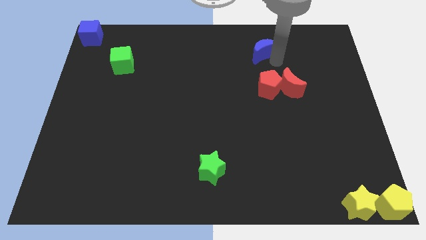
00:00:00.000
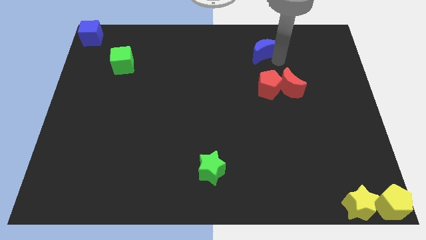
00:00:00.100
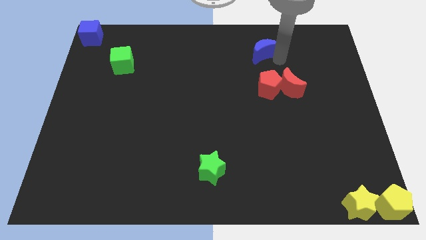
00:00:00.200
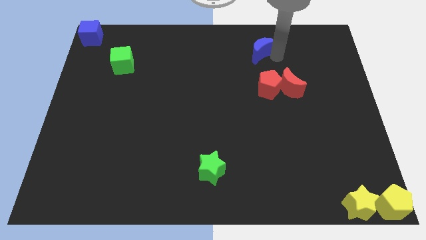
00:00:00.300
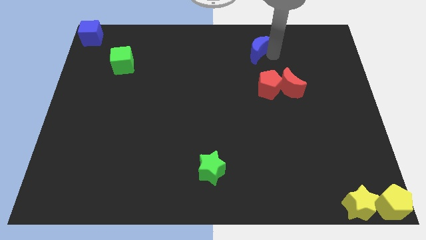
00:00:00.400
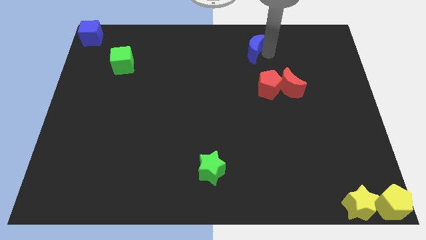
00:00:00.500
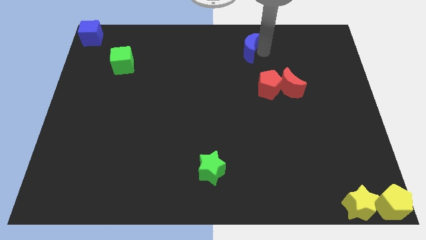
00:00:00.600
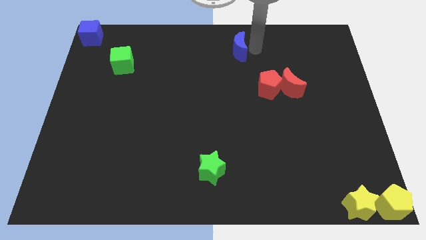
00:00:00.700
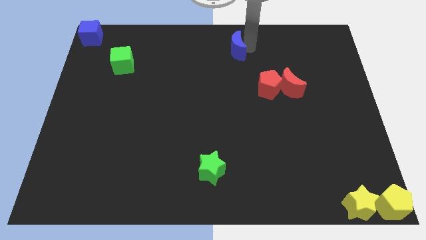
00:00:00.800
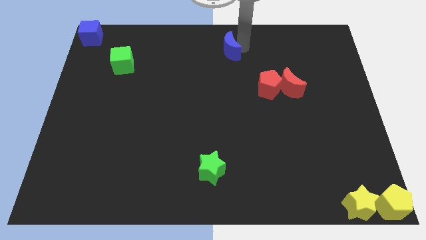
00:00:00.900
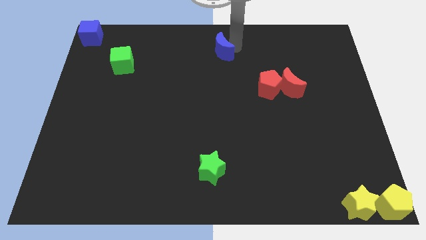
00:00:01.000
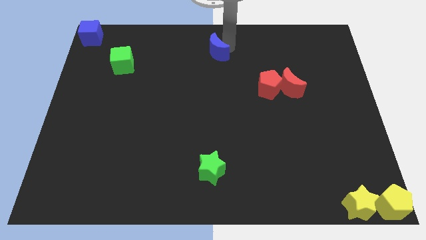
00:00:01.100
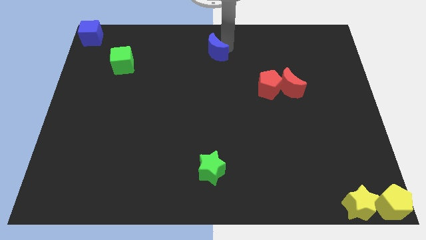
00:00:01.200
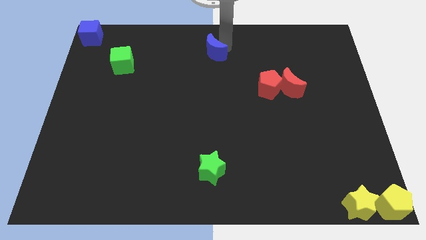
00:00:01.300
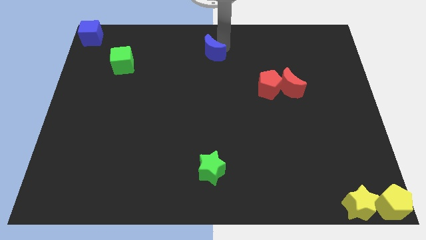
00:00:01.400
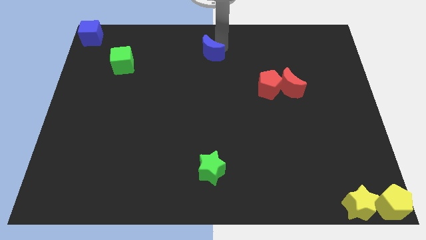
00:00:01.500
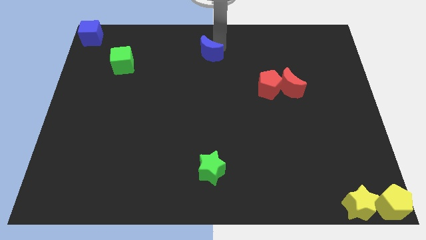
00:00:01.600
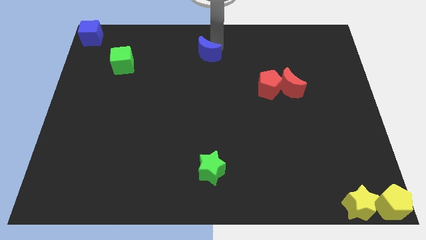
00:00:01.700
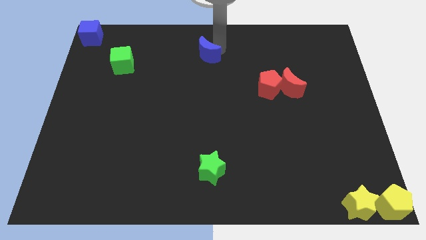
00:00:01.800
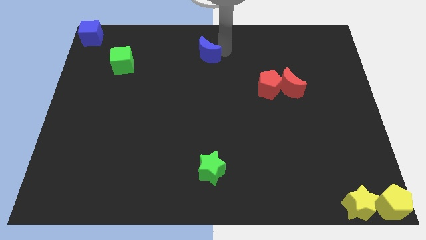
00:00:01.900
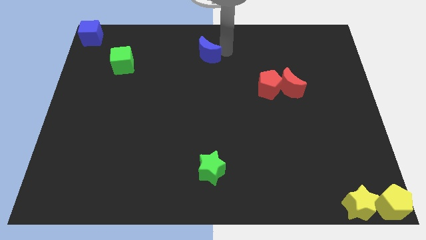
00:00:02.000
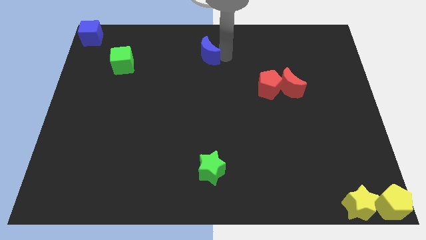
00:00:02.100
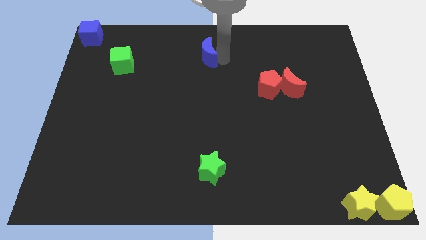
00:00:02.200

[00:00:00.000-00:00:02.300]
place the blue moon right to the green cube

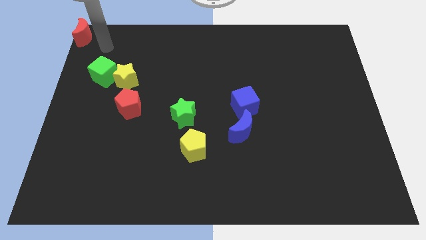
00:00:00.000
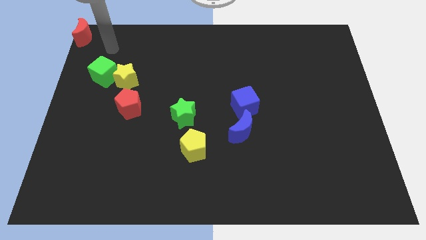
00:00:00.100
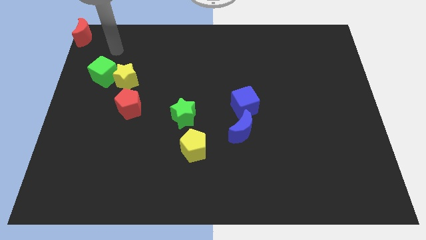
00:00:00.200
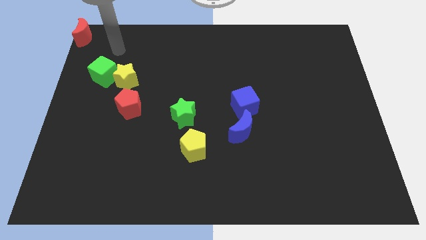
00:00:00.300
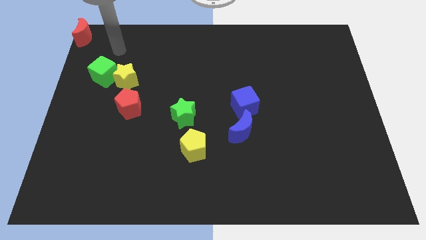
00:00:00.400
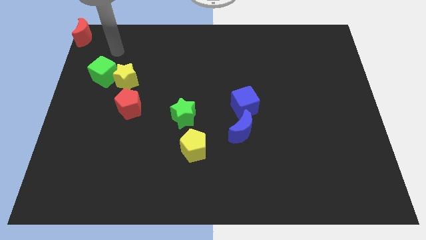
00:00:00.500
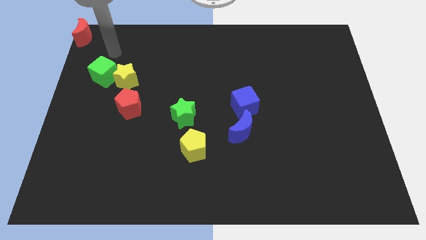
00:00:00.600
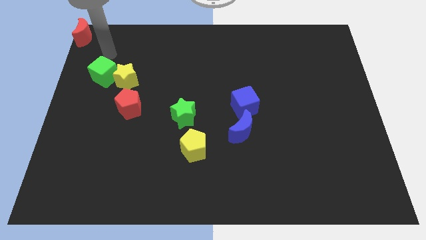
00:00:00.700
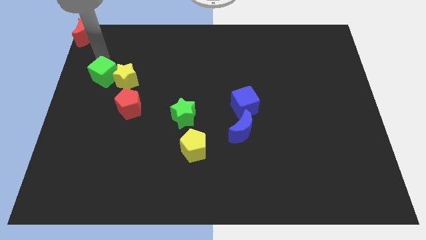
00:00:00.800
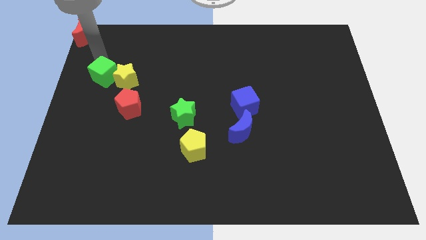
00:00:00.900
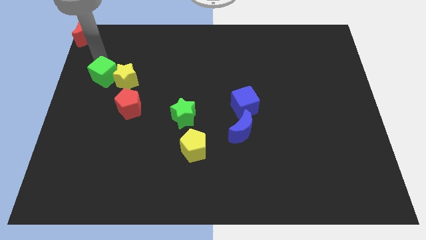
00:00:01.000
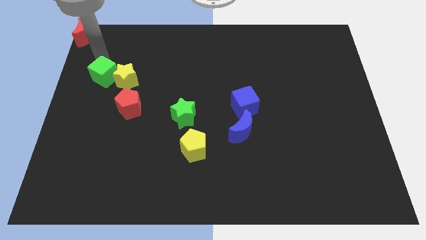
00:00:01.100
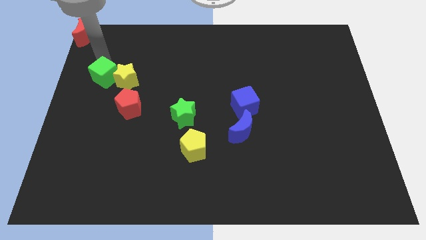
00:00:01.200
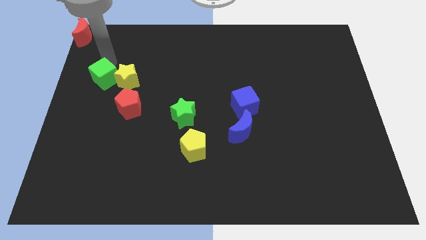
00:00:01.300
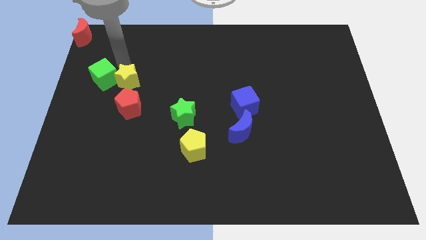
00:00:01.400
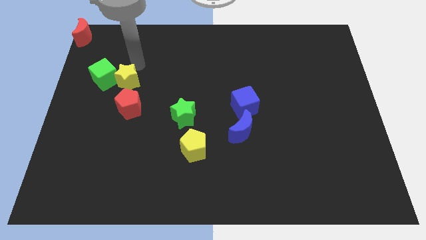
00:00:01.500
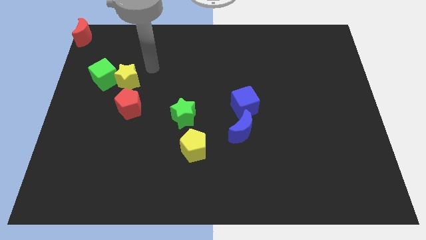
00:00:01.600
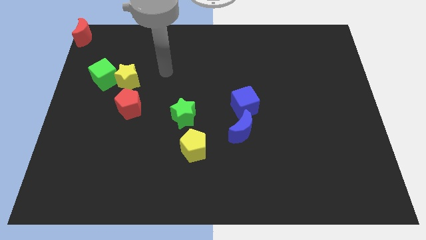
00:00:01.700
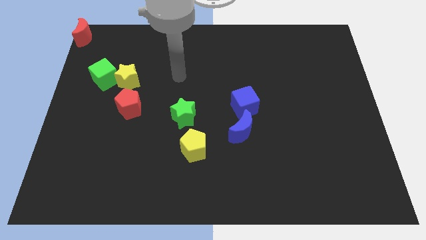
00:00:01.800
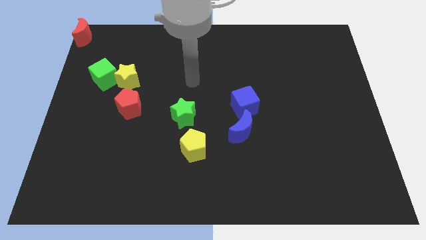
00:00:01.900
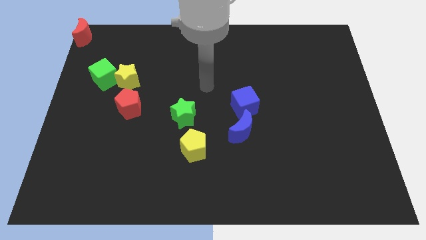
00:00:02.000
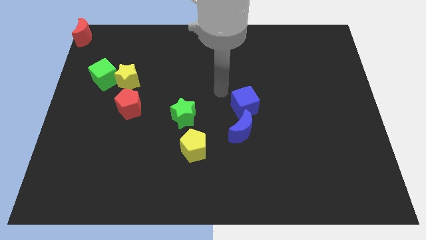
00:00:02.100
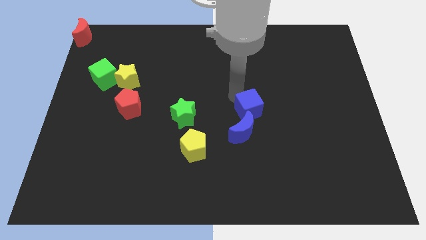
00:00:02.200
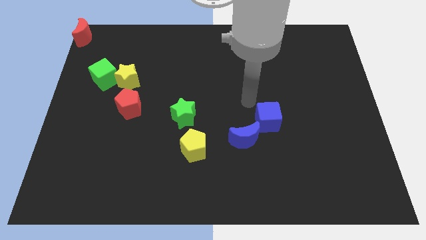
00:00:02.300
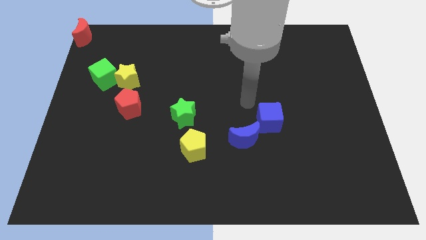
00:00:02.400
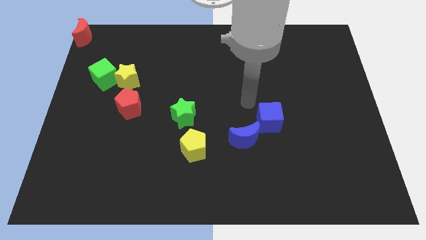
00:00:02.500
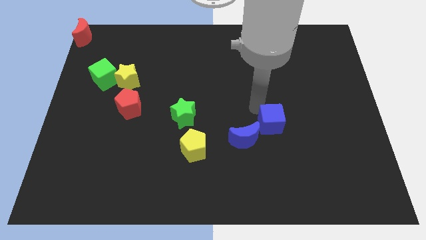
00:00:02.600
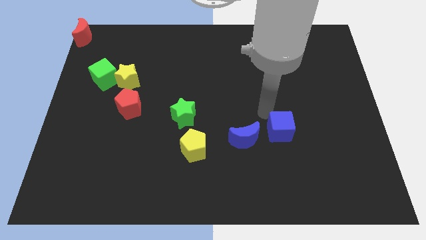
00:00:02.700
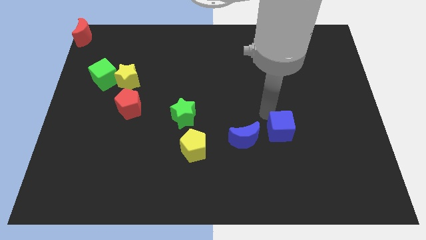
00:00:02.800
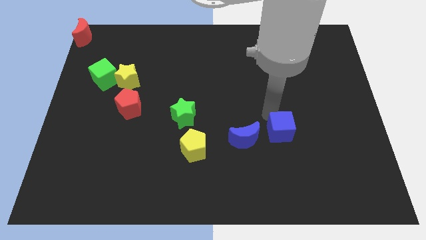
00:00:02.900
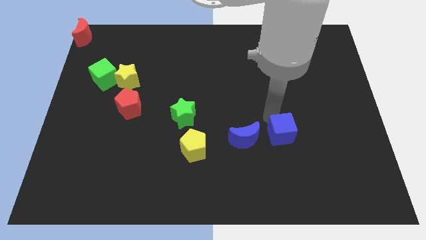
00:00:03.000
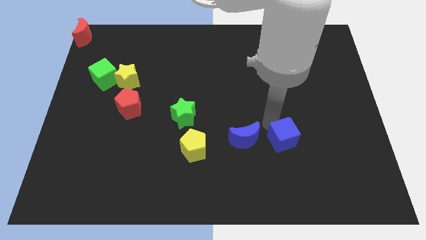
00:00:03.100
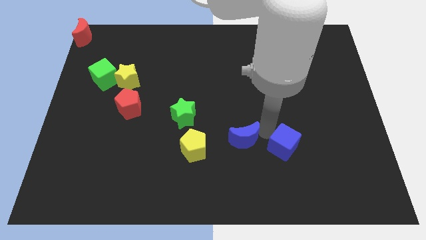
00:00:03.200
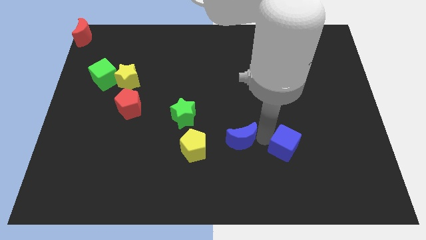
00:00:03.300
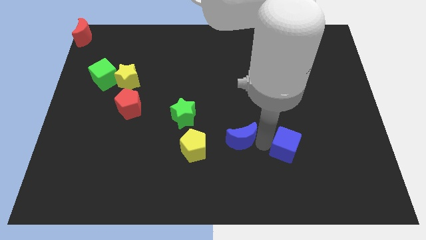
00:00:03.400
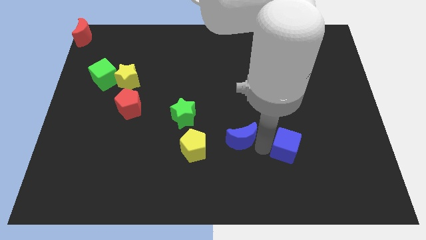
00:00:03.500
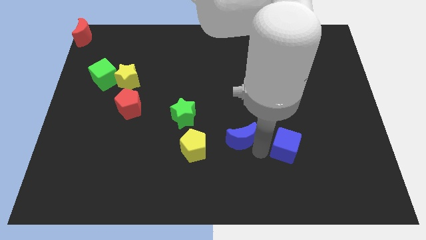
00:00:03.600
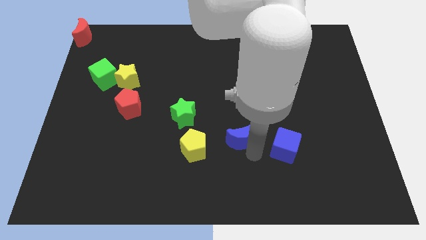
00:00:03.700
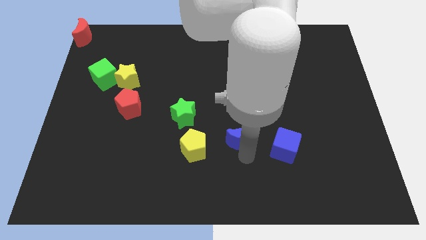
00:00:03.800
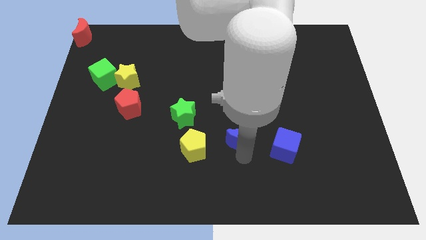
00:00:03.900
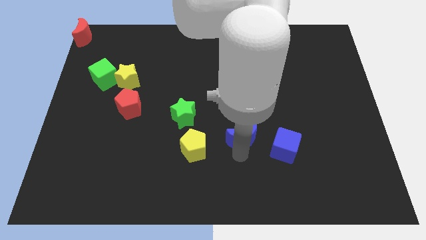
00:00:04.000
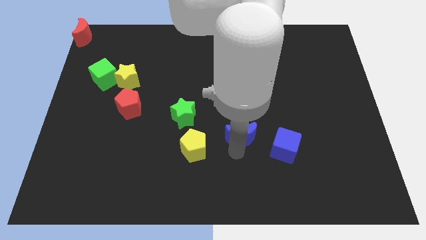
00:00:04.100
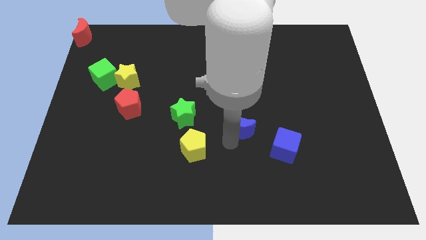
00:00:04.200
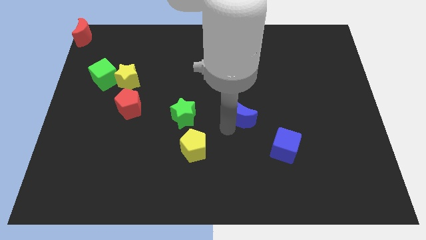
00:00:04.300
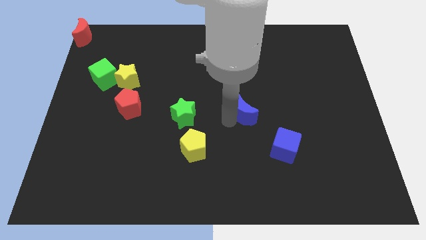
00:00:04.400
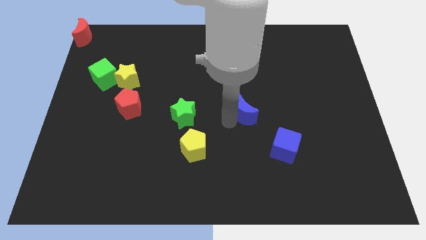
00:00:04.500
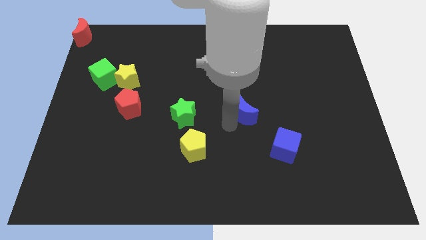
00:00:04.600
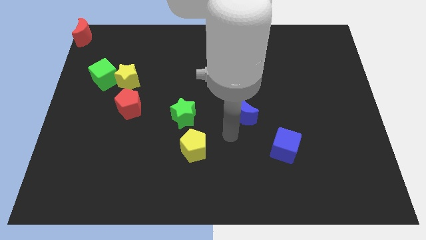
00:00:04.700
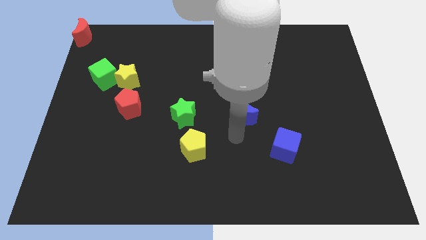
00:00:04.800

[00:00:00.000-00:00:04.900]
separate the blue cube and blue crescent

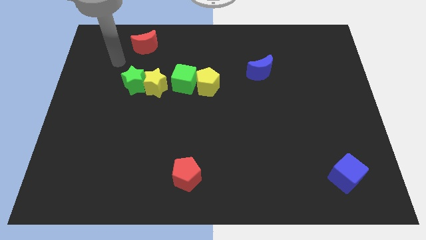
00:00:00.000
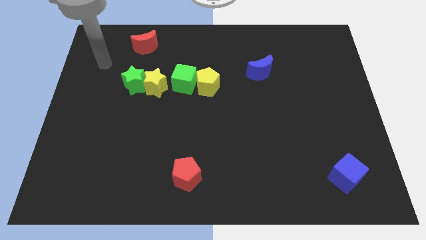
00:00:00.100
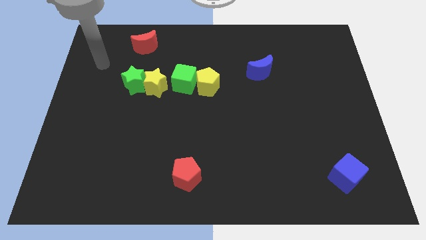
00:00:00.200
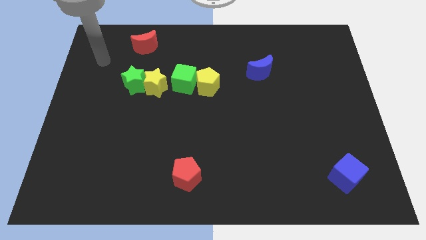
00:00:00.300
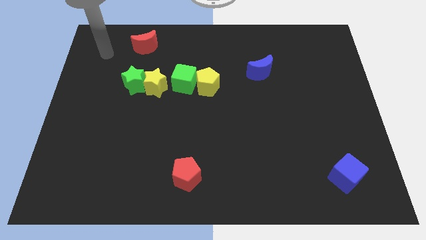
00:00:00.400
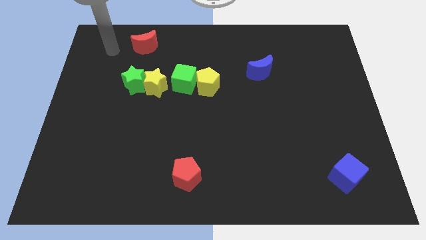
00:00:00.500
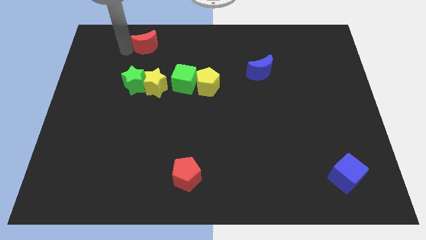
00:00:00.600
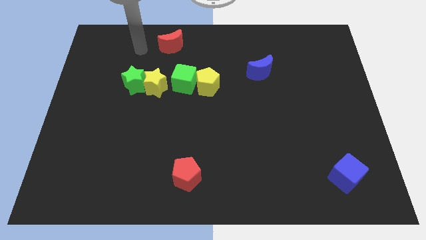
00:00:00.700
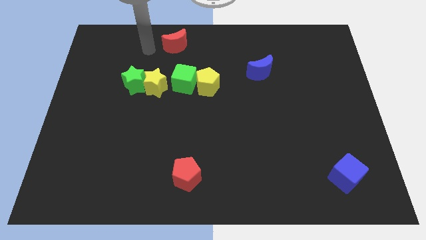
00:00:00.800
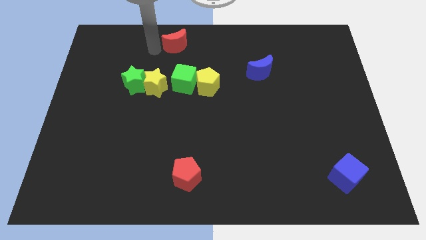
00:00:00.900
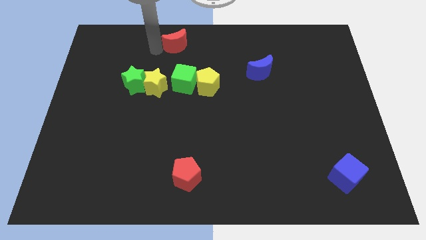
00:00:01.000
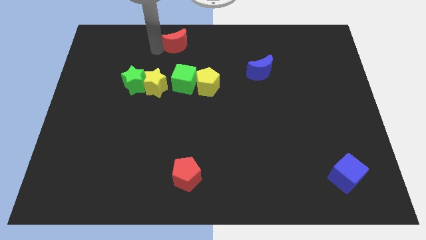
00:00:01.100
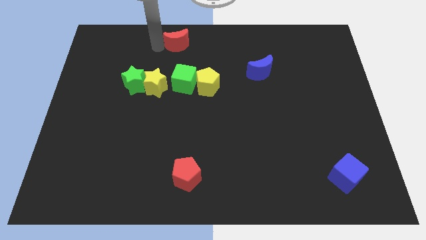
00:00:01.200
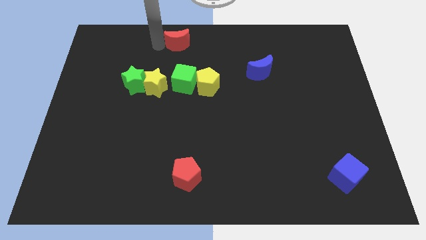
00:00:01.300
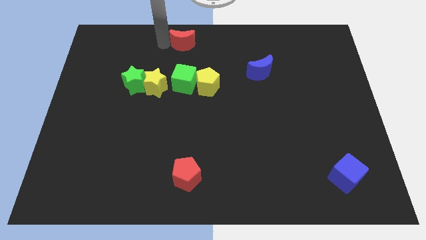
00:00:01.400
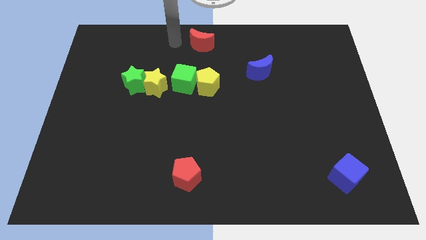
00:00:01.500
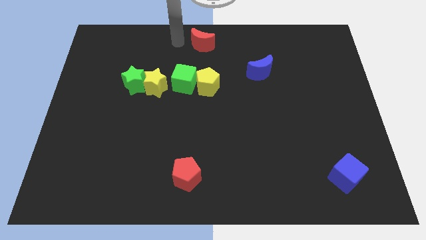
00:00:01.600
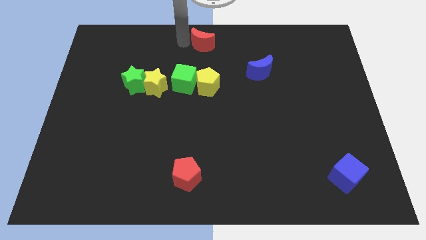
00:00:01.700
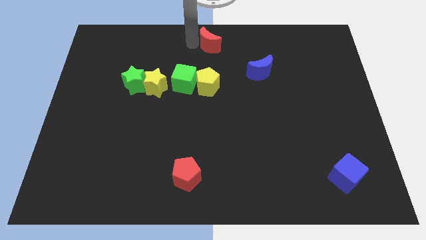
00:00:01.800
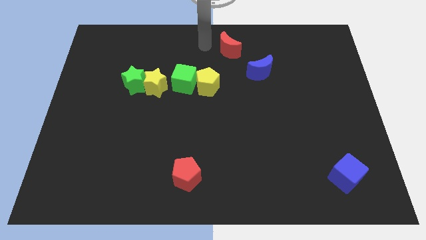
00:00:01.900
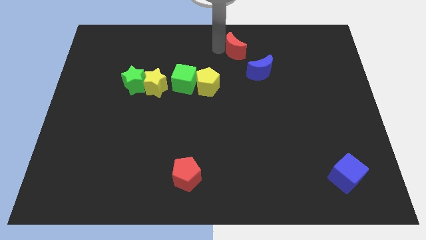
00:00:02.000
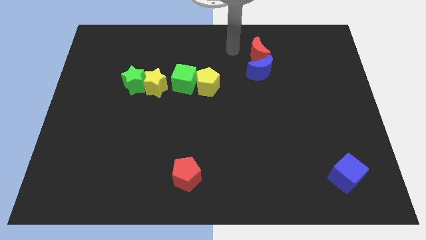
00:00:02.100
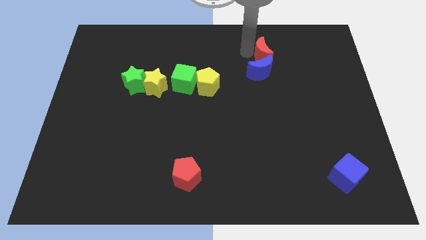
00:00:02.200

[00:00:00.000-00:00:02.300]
place red crescent on the top of blue crescent
